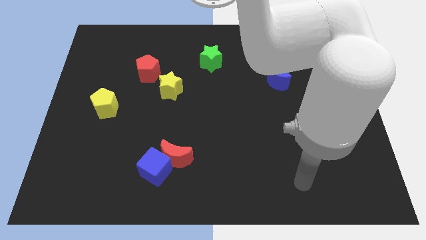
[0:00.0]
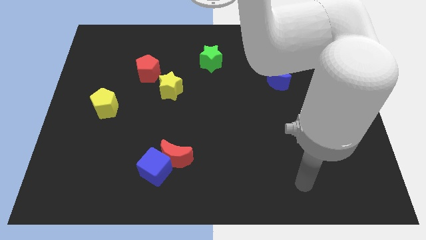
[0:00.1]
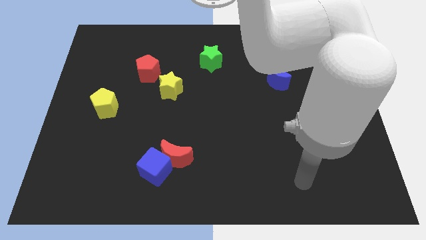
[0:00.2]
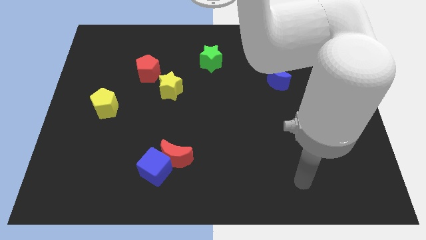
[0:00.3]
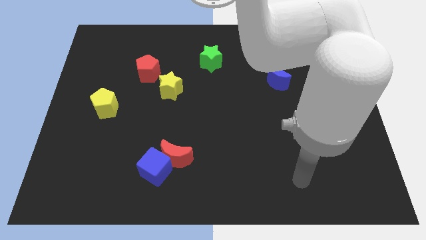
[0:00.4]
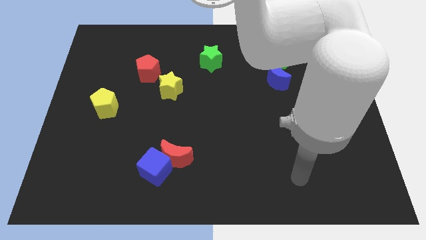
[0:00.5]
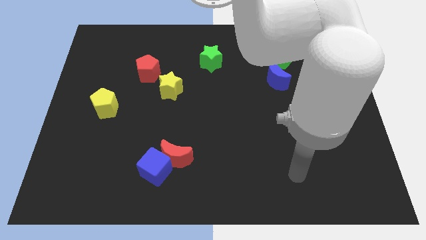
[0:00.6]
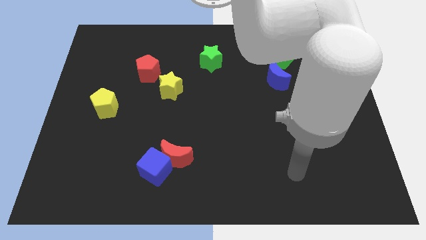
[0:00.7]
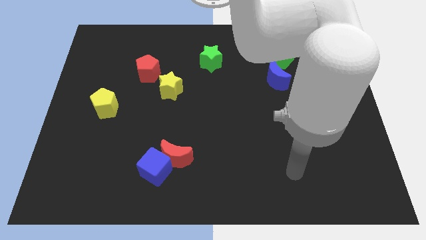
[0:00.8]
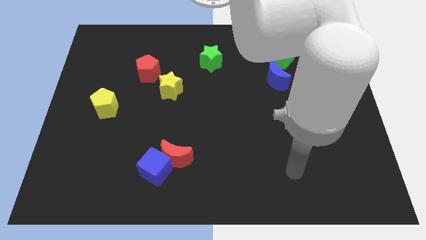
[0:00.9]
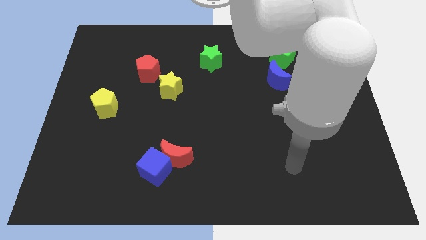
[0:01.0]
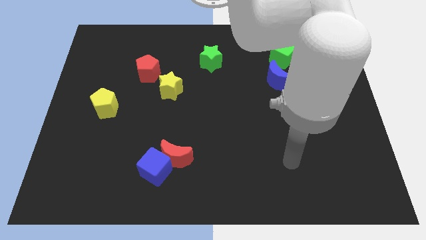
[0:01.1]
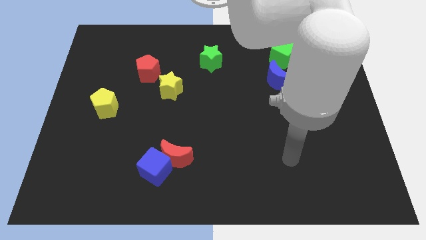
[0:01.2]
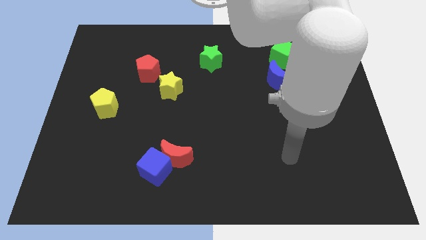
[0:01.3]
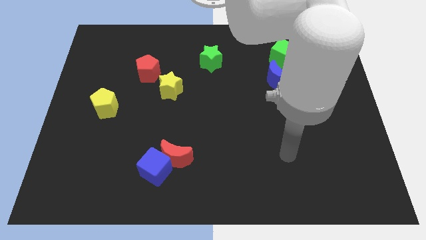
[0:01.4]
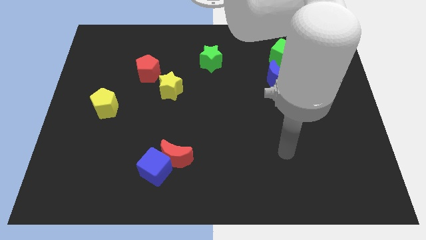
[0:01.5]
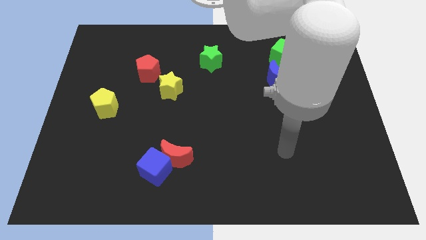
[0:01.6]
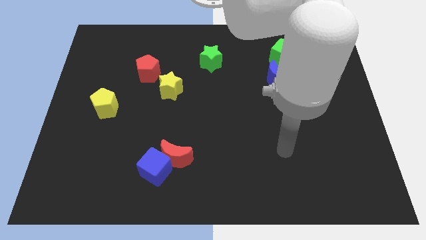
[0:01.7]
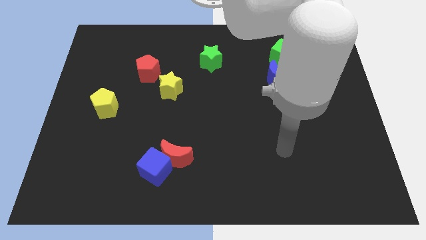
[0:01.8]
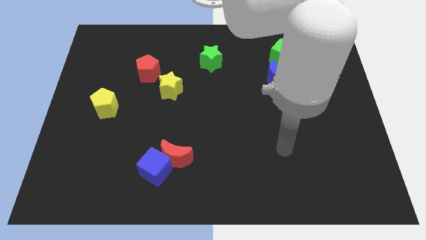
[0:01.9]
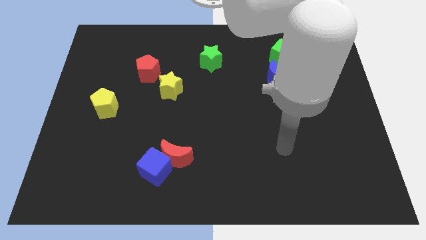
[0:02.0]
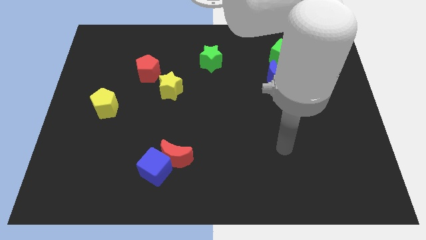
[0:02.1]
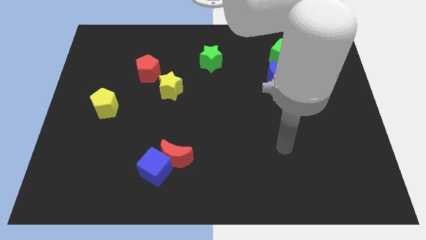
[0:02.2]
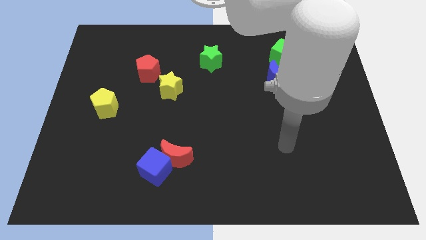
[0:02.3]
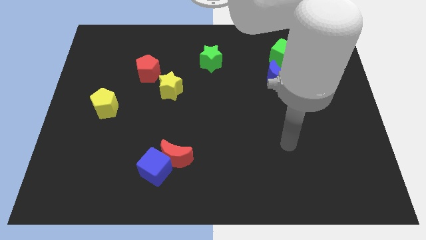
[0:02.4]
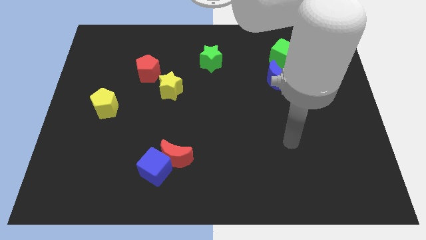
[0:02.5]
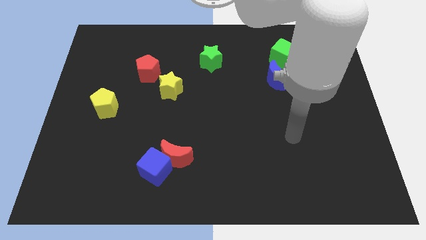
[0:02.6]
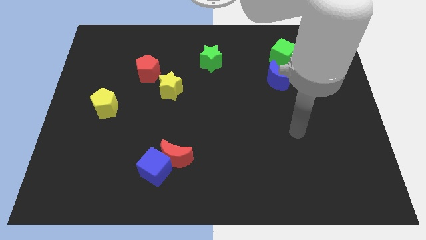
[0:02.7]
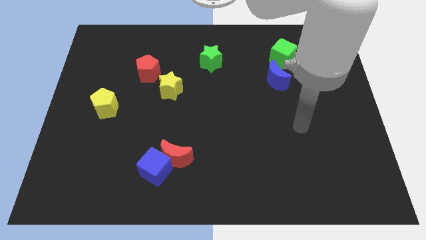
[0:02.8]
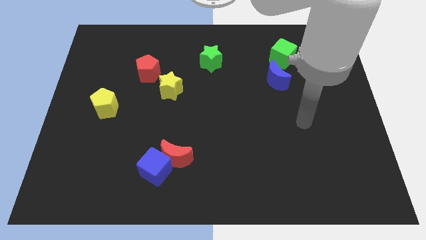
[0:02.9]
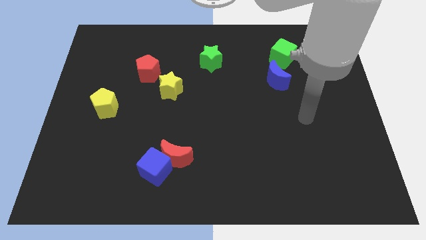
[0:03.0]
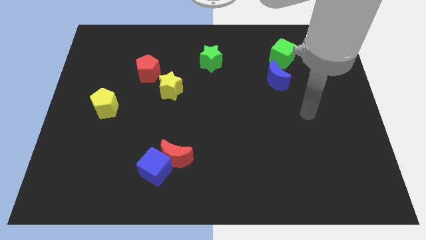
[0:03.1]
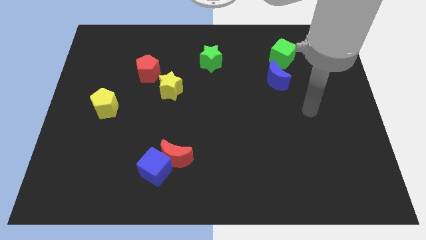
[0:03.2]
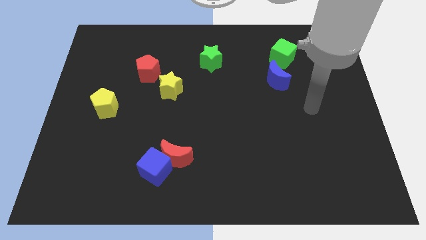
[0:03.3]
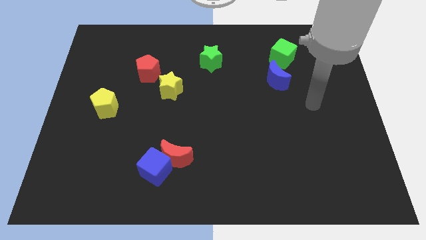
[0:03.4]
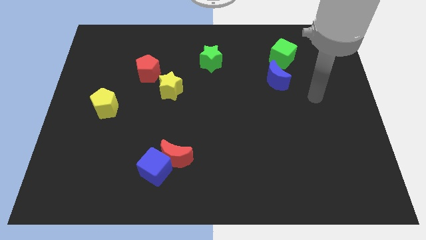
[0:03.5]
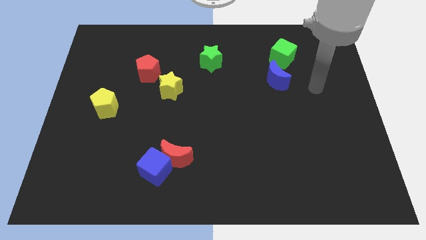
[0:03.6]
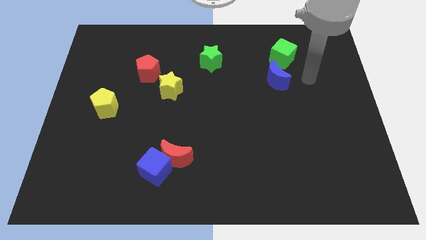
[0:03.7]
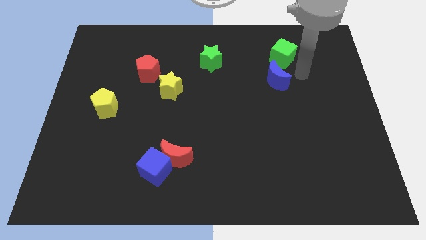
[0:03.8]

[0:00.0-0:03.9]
move your arm to the right of the blue crescent

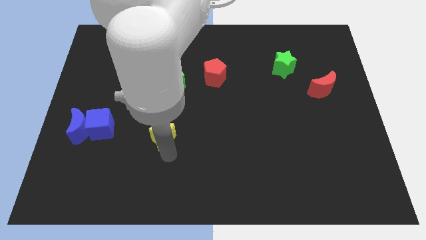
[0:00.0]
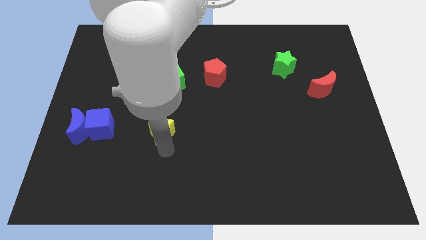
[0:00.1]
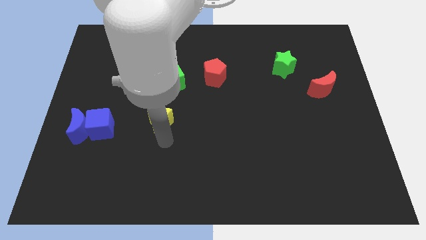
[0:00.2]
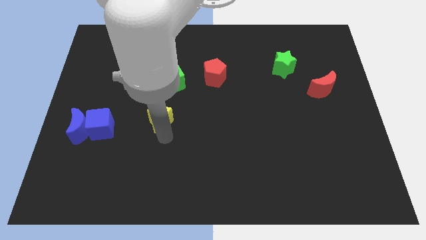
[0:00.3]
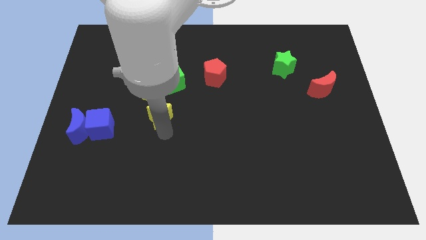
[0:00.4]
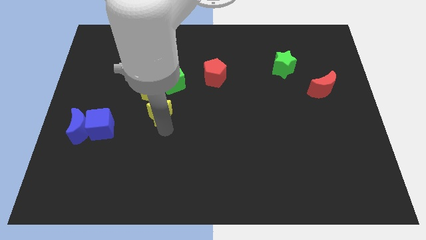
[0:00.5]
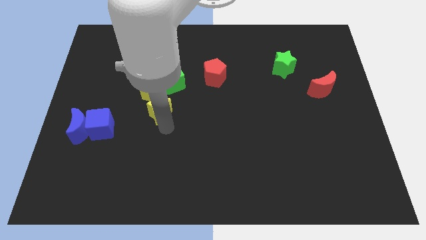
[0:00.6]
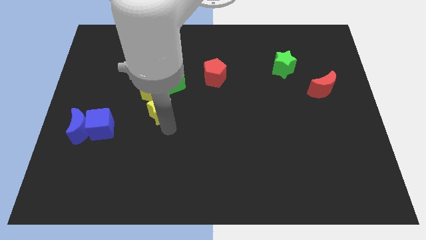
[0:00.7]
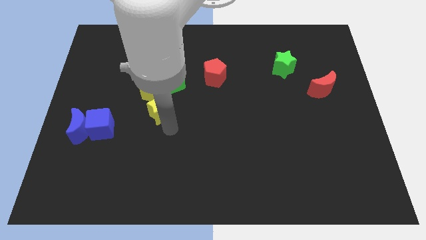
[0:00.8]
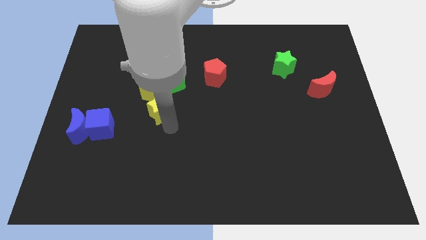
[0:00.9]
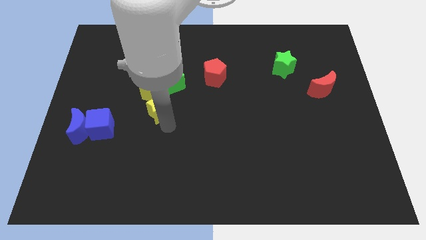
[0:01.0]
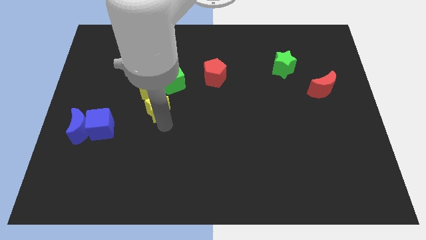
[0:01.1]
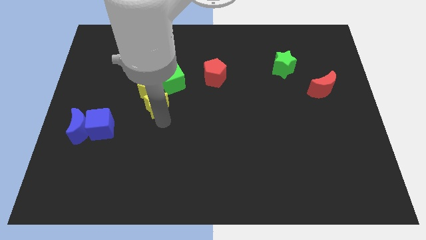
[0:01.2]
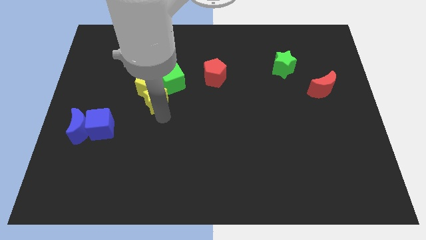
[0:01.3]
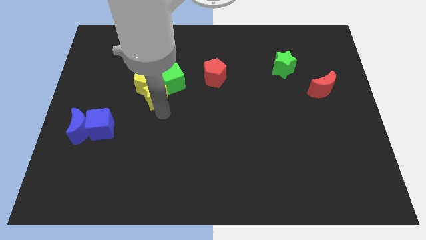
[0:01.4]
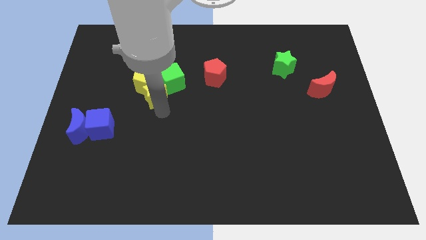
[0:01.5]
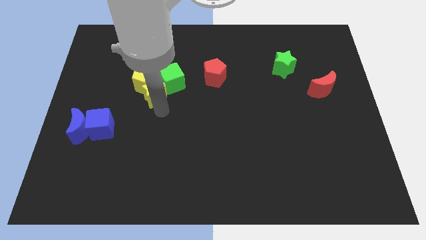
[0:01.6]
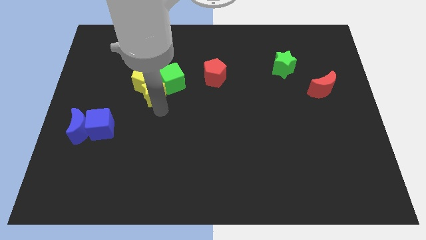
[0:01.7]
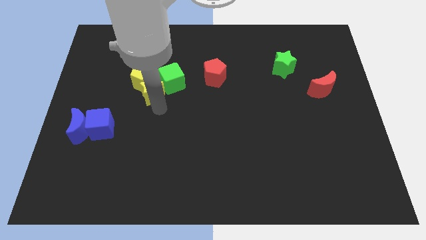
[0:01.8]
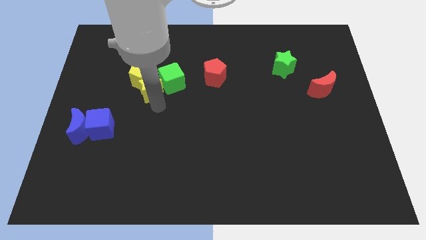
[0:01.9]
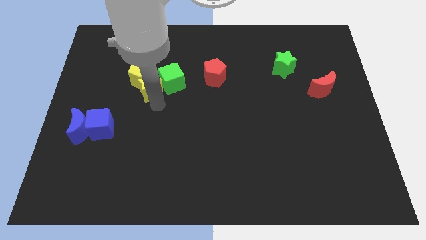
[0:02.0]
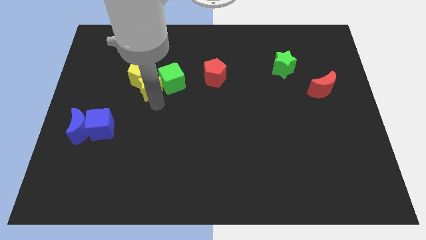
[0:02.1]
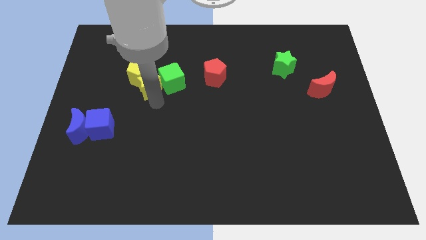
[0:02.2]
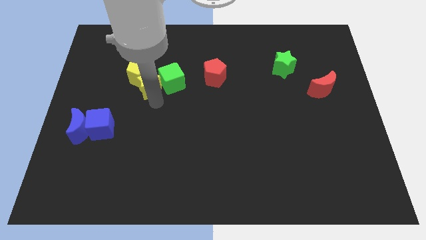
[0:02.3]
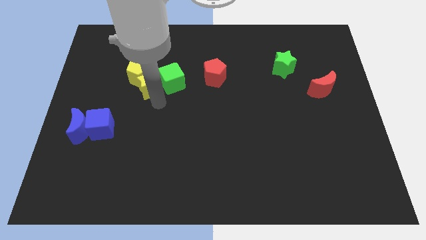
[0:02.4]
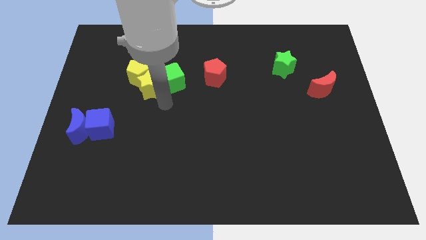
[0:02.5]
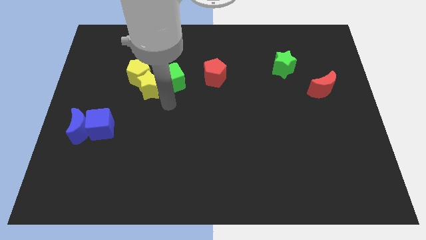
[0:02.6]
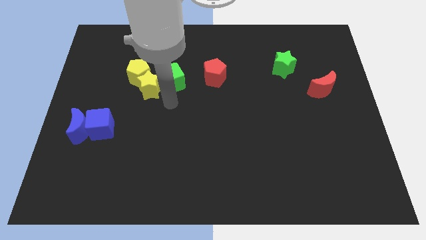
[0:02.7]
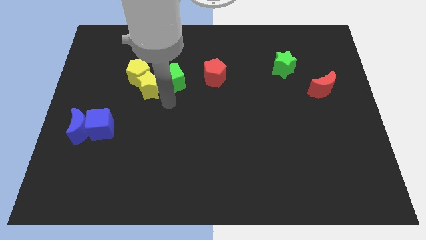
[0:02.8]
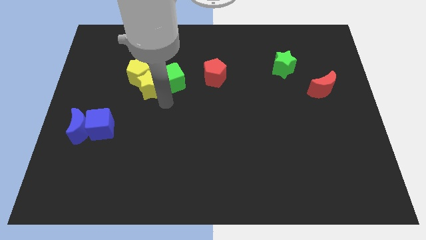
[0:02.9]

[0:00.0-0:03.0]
move yellow blocks slightly up

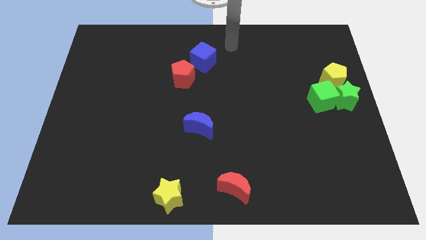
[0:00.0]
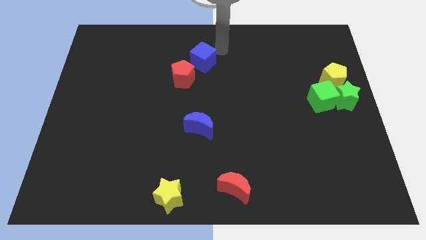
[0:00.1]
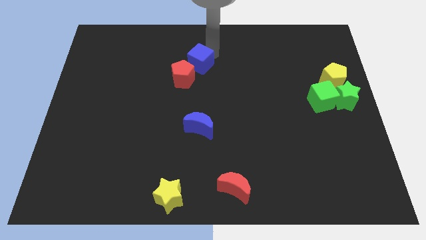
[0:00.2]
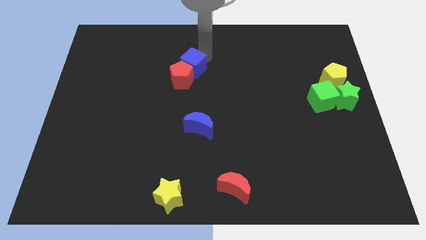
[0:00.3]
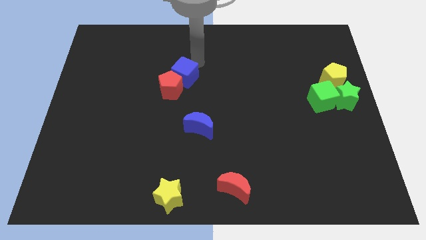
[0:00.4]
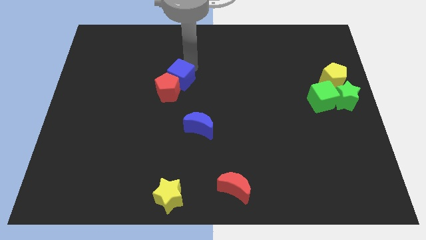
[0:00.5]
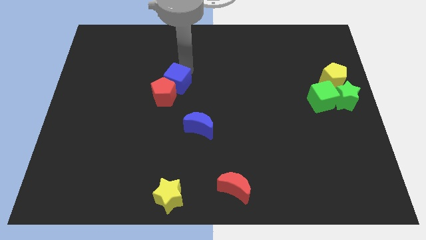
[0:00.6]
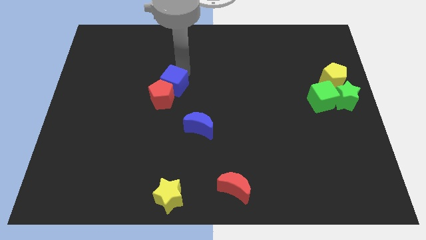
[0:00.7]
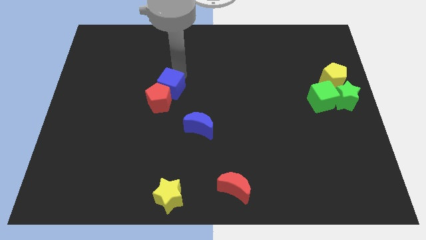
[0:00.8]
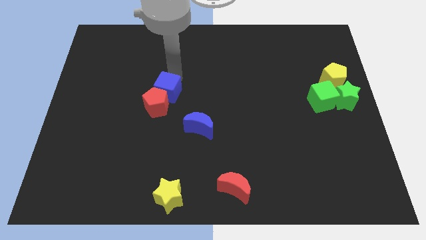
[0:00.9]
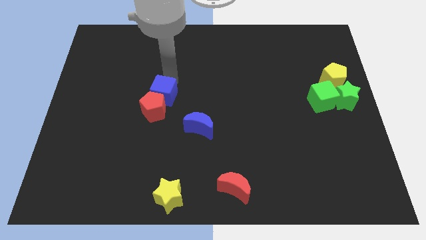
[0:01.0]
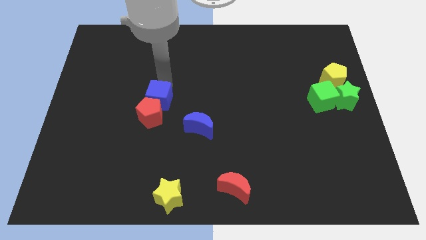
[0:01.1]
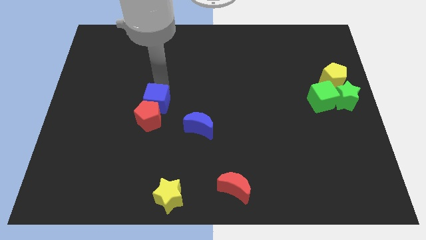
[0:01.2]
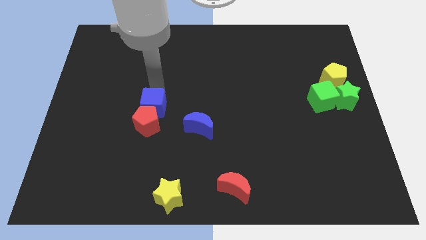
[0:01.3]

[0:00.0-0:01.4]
push the blue cube into the red pentagon

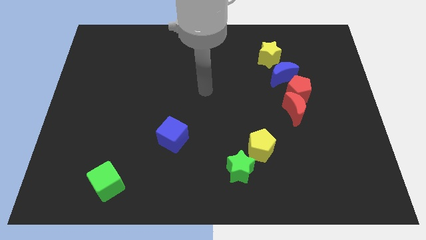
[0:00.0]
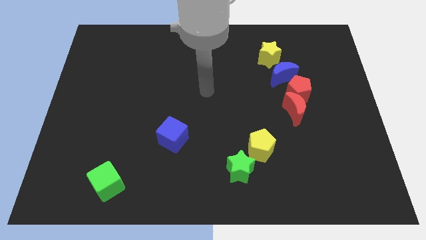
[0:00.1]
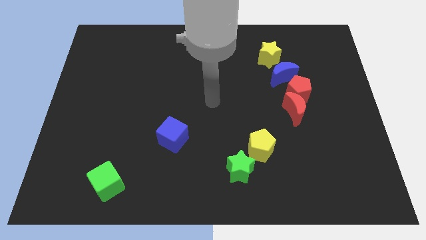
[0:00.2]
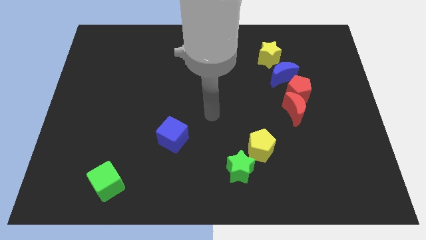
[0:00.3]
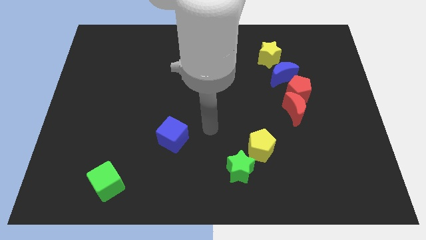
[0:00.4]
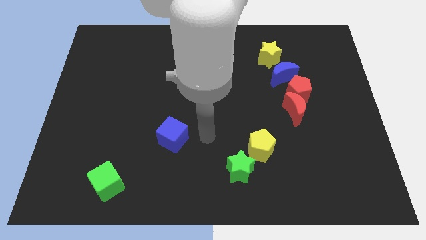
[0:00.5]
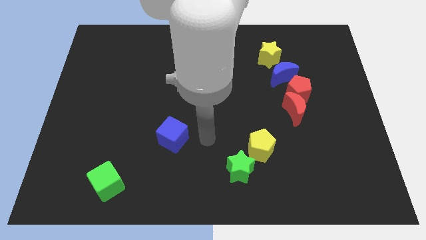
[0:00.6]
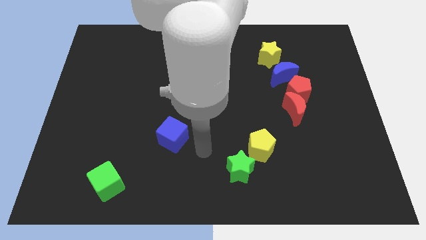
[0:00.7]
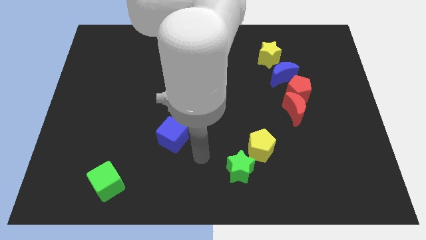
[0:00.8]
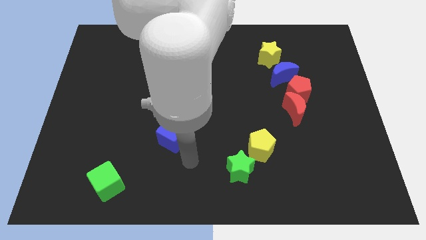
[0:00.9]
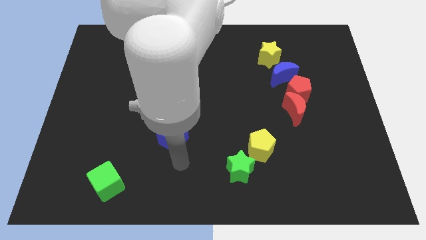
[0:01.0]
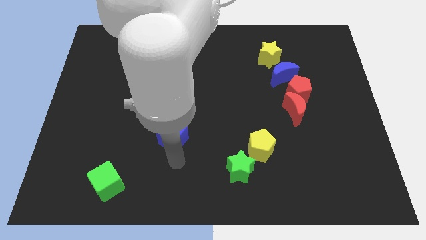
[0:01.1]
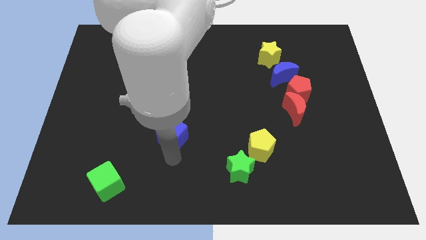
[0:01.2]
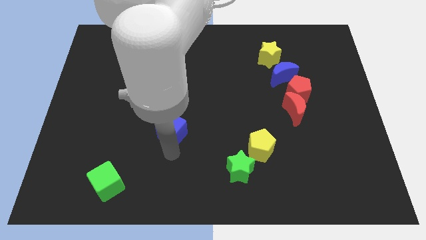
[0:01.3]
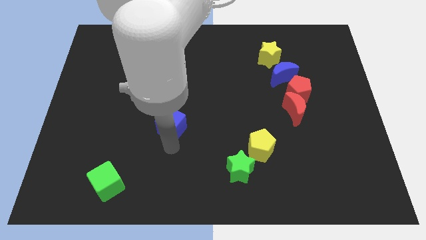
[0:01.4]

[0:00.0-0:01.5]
touch the blue cube
